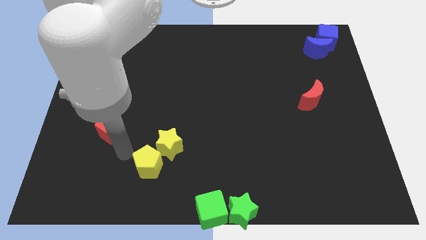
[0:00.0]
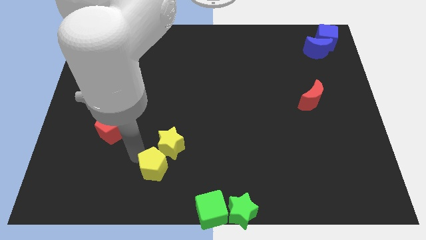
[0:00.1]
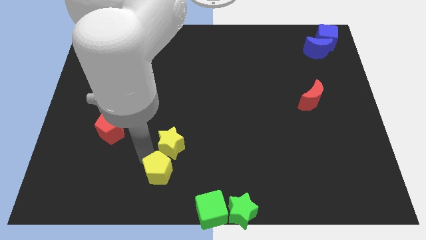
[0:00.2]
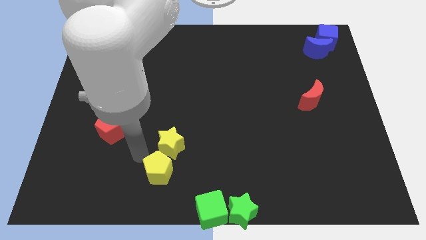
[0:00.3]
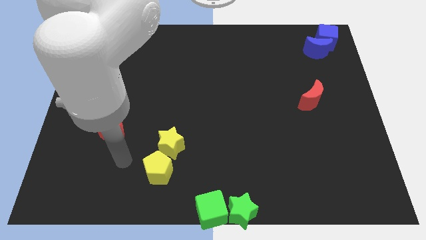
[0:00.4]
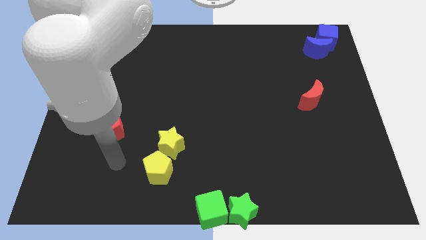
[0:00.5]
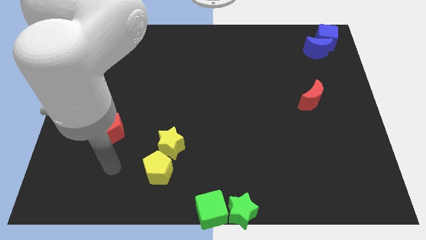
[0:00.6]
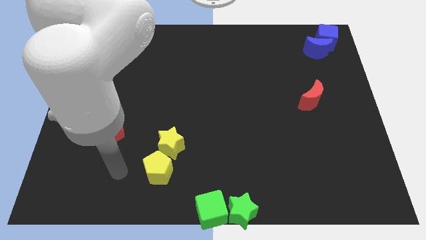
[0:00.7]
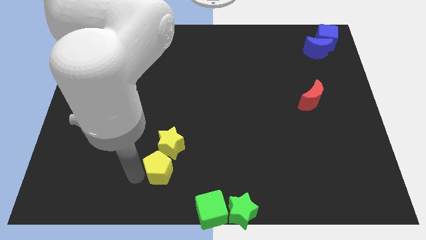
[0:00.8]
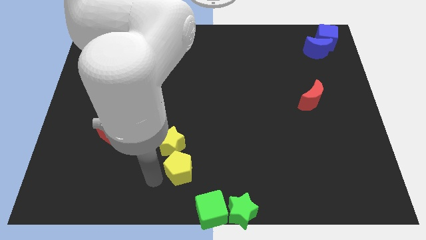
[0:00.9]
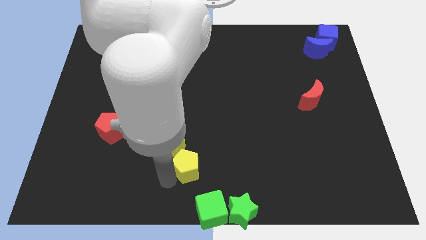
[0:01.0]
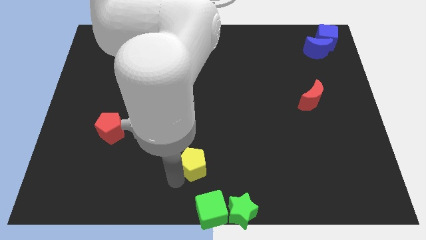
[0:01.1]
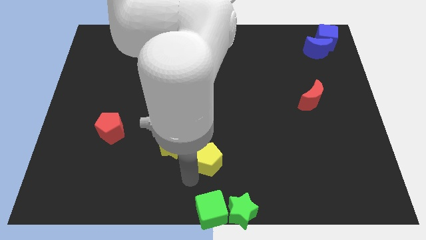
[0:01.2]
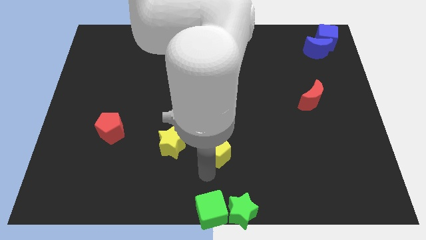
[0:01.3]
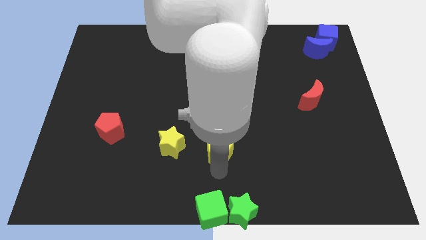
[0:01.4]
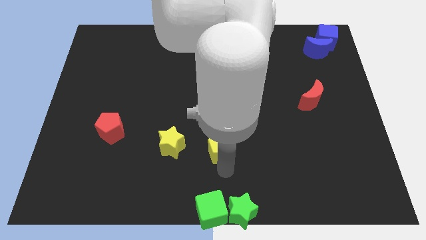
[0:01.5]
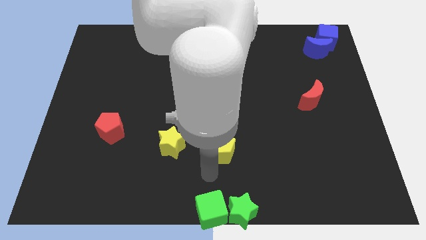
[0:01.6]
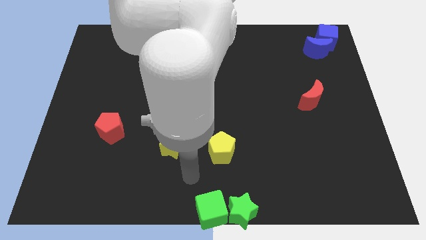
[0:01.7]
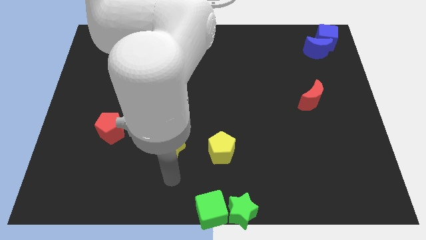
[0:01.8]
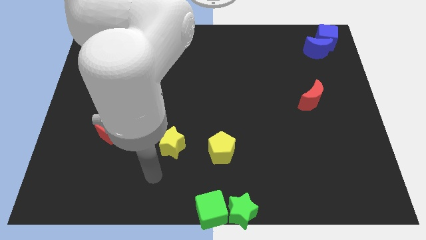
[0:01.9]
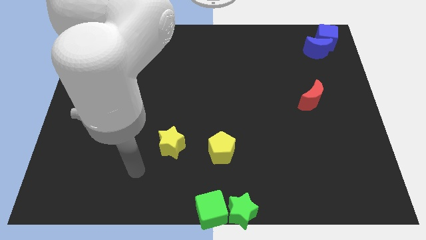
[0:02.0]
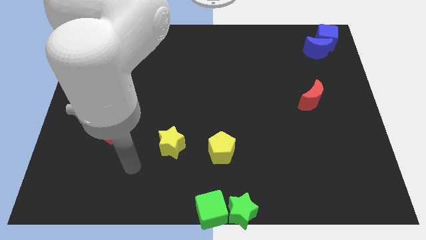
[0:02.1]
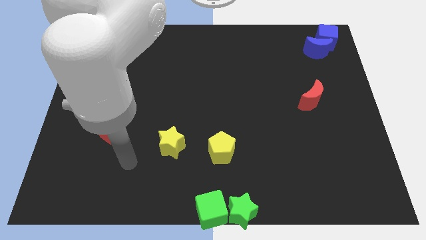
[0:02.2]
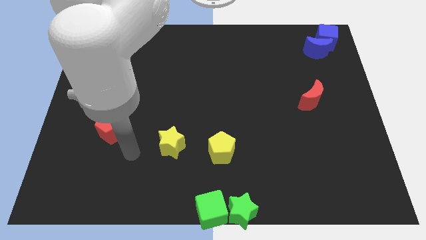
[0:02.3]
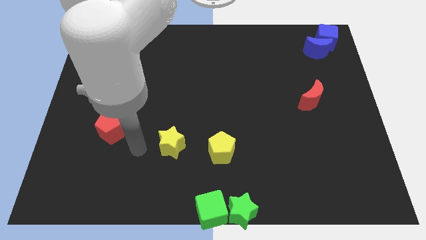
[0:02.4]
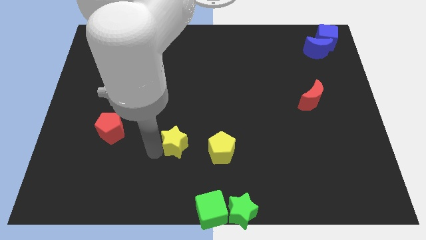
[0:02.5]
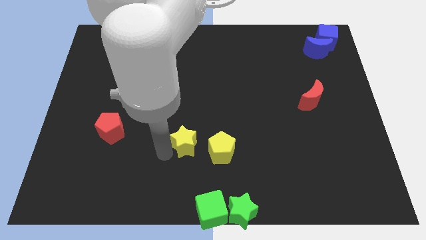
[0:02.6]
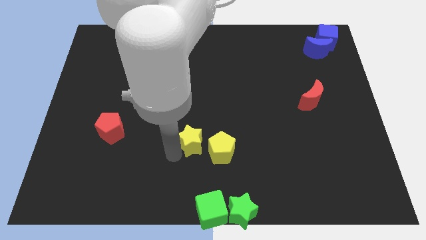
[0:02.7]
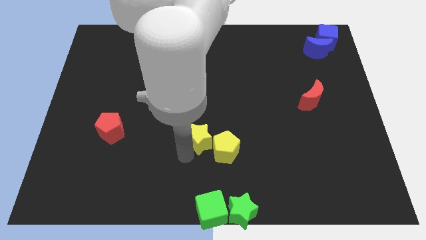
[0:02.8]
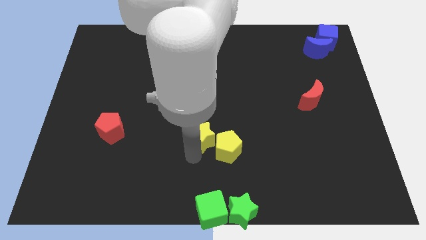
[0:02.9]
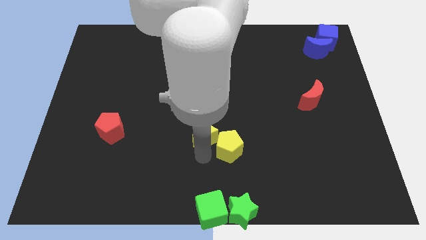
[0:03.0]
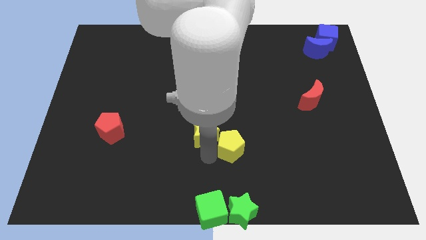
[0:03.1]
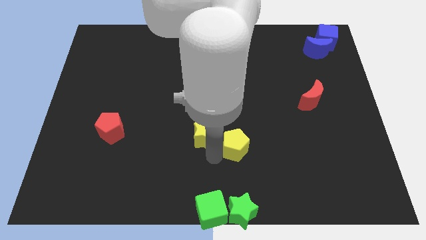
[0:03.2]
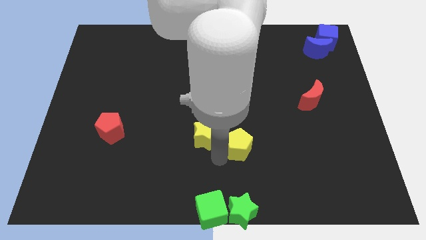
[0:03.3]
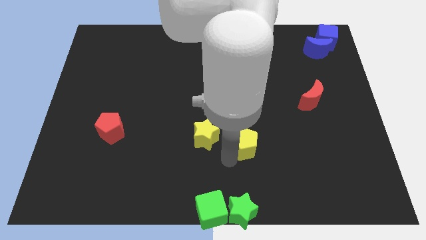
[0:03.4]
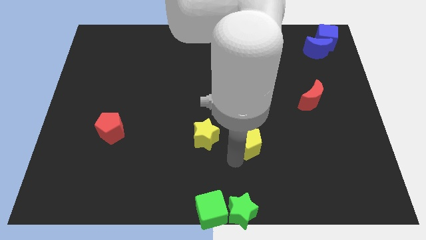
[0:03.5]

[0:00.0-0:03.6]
push yellow pentagon above green star

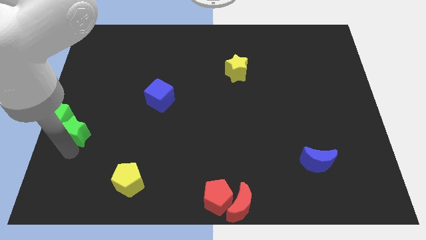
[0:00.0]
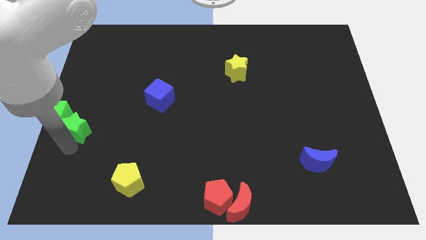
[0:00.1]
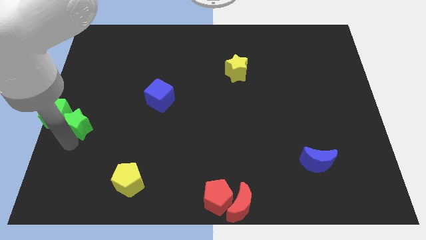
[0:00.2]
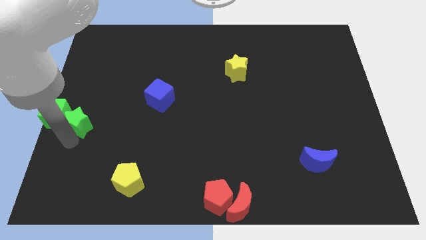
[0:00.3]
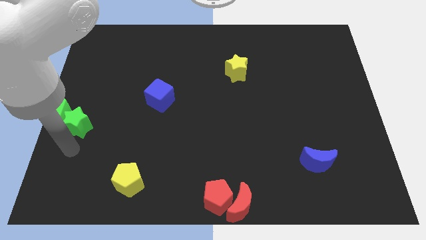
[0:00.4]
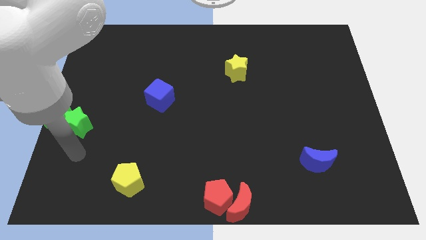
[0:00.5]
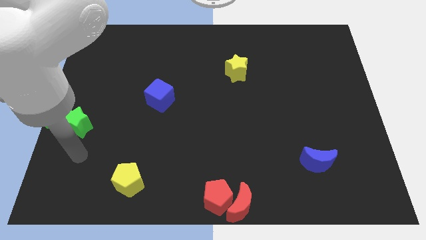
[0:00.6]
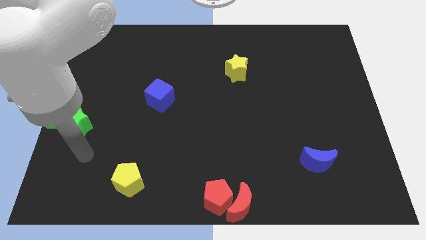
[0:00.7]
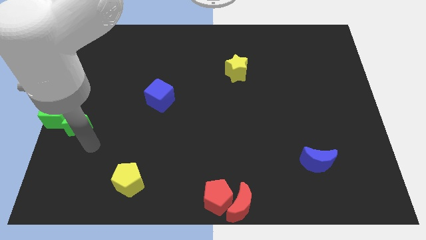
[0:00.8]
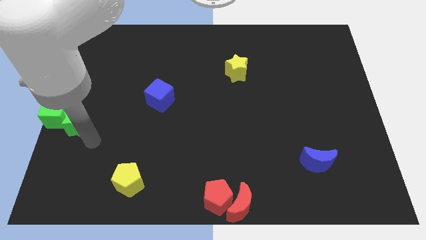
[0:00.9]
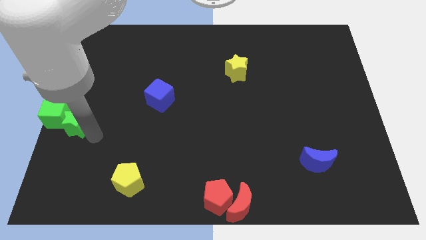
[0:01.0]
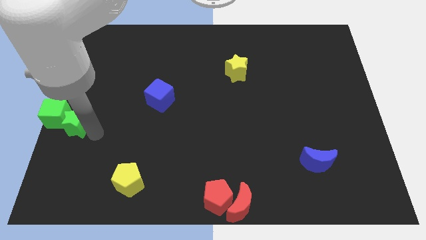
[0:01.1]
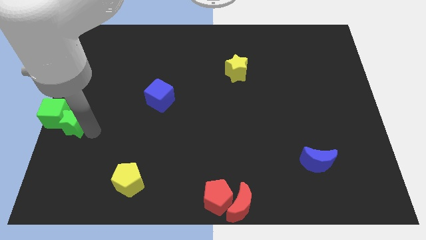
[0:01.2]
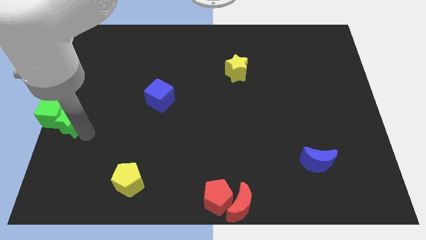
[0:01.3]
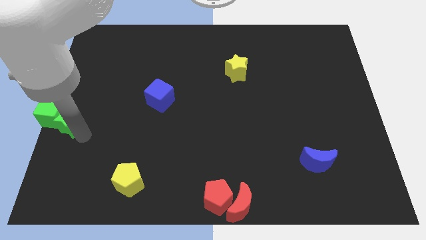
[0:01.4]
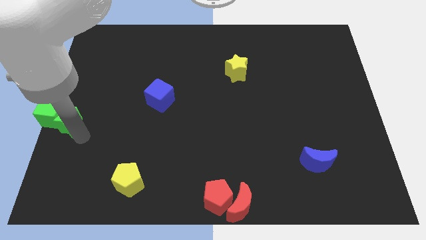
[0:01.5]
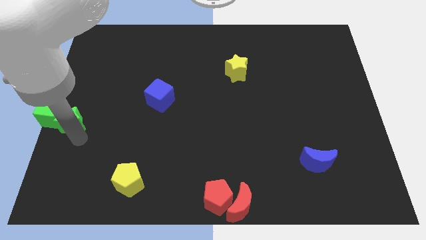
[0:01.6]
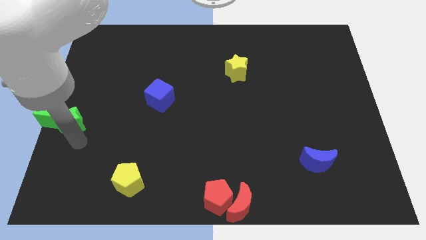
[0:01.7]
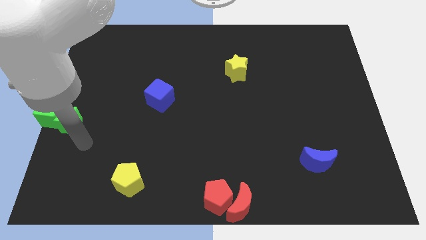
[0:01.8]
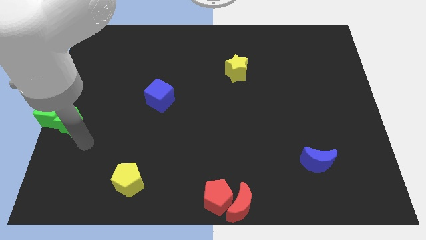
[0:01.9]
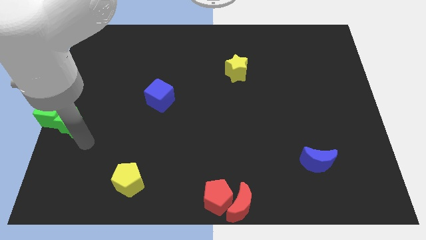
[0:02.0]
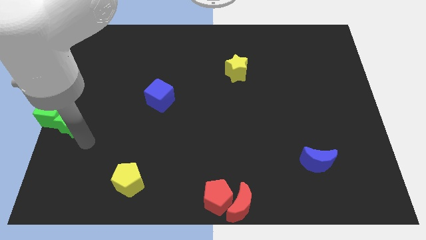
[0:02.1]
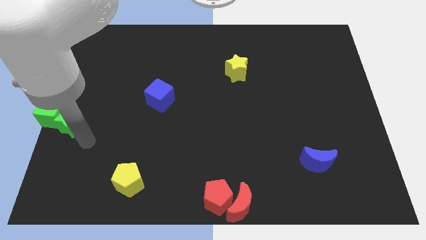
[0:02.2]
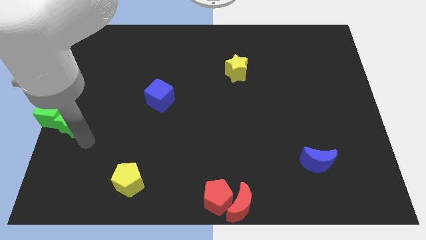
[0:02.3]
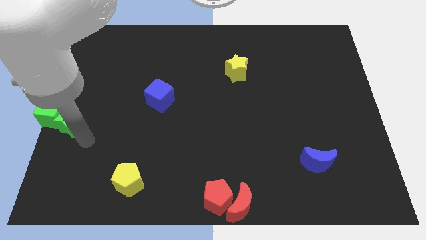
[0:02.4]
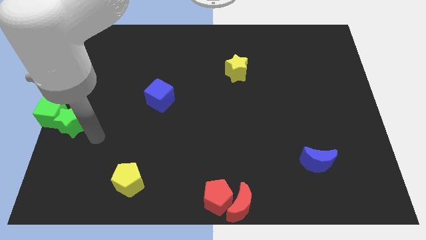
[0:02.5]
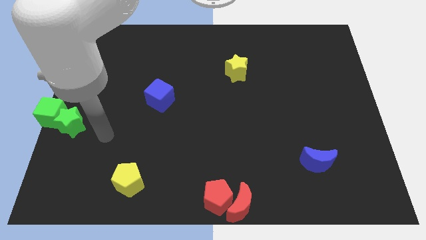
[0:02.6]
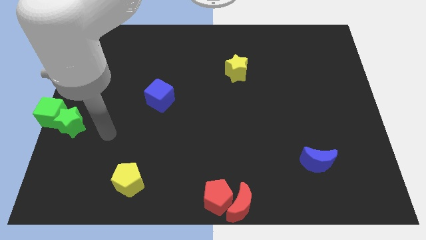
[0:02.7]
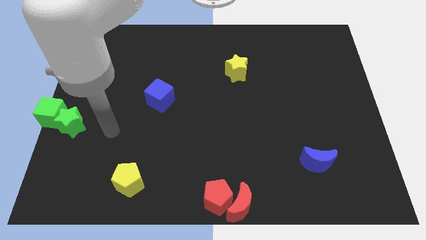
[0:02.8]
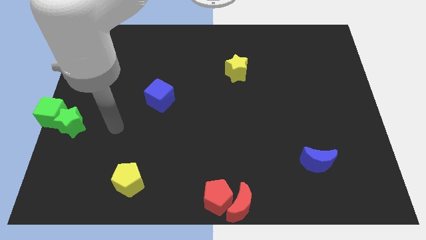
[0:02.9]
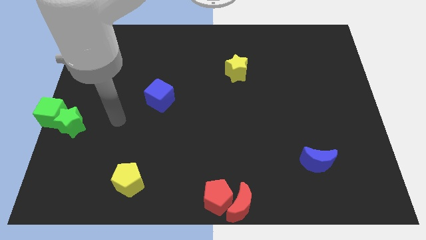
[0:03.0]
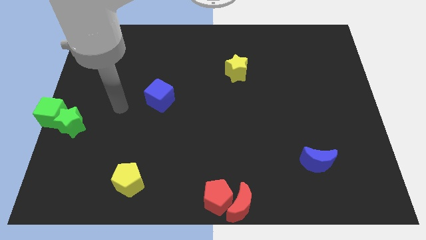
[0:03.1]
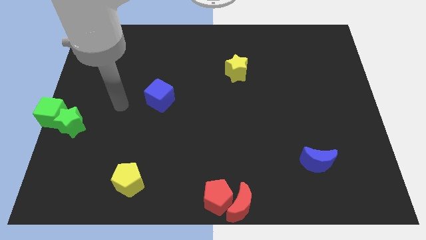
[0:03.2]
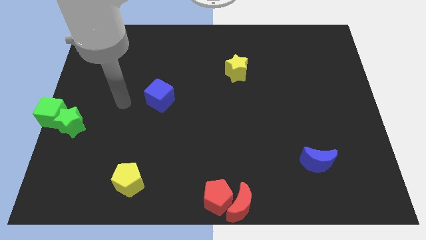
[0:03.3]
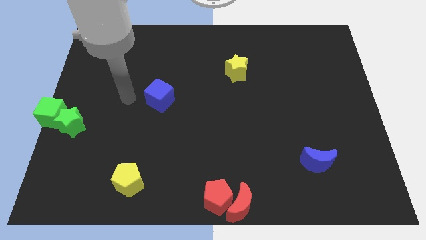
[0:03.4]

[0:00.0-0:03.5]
slightly push the green blocks to the left of the board

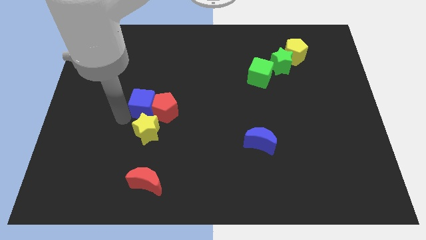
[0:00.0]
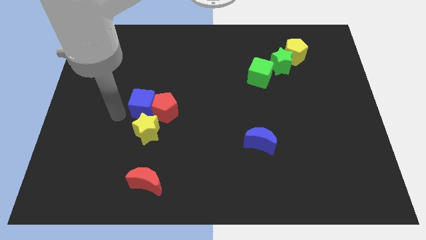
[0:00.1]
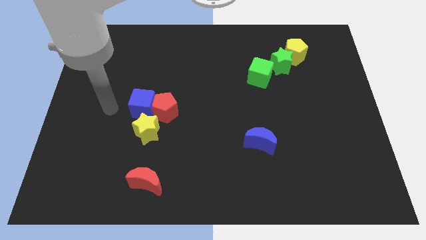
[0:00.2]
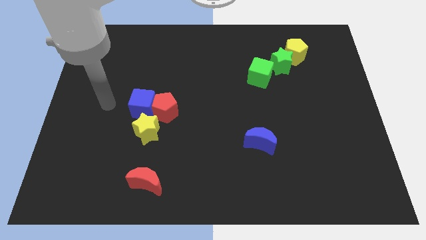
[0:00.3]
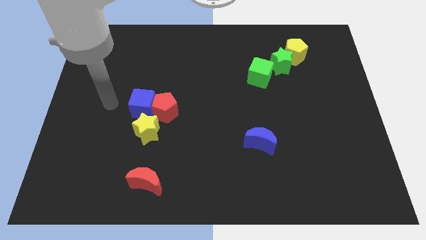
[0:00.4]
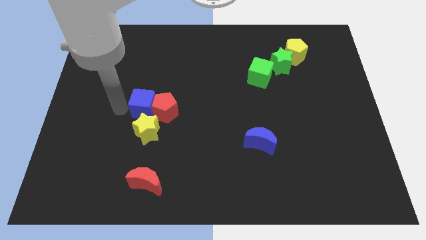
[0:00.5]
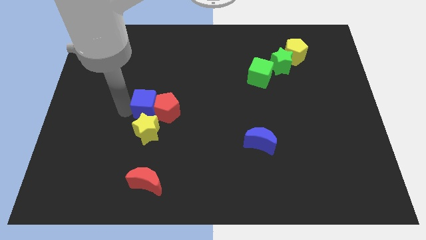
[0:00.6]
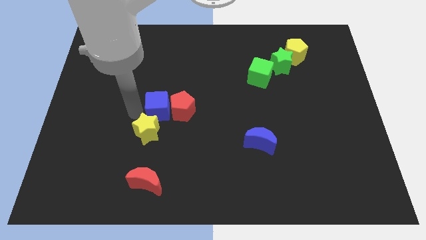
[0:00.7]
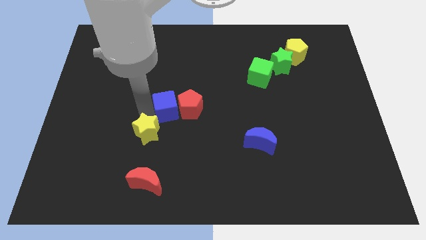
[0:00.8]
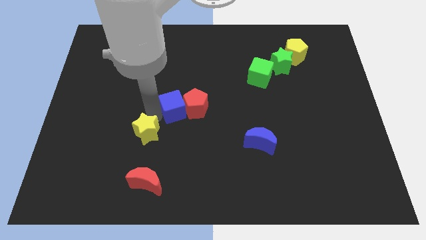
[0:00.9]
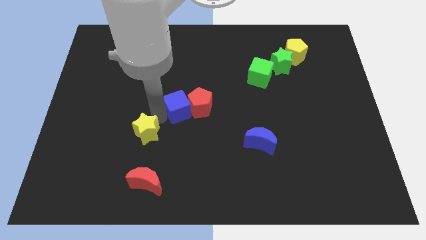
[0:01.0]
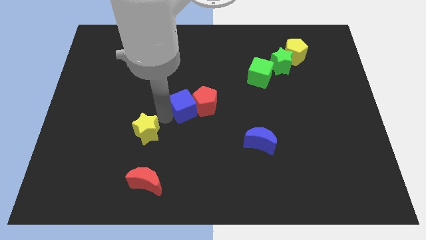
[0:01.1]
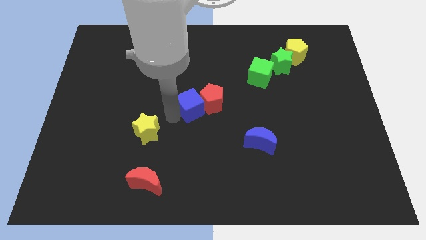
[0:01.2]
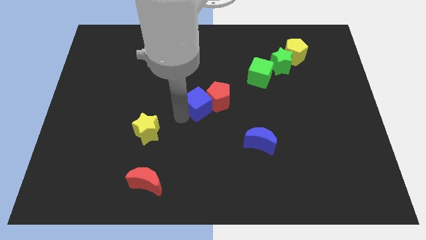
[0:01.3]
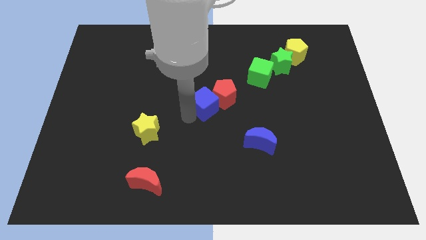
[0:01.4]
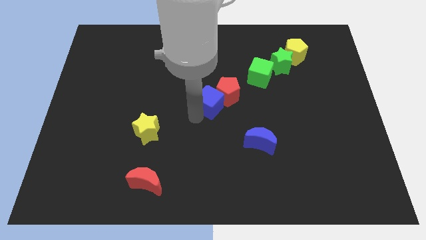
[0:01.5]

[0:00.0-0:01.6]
move the blue cube and red pentagon diagonal top right to yellow star

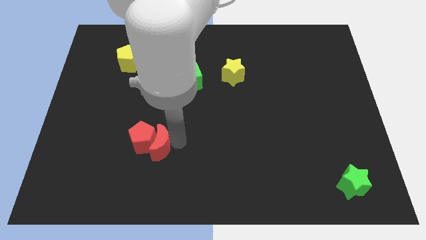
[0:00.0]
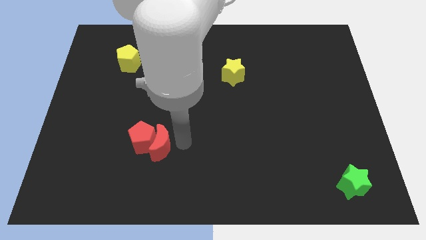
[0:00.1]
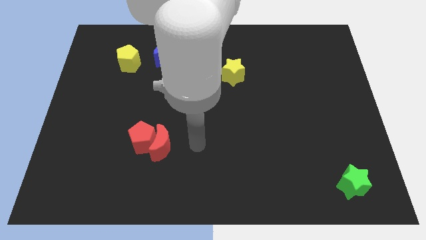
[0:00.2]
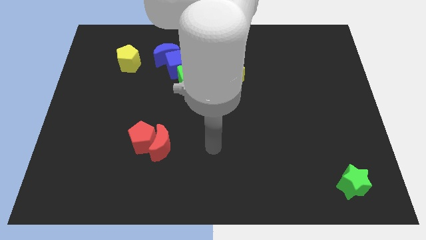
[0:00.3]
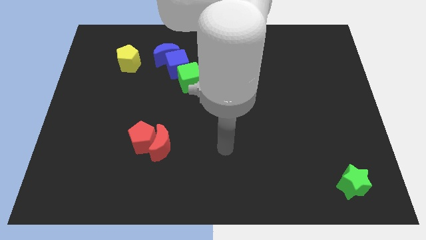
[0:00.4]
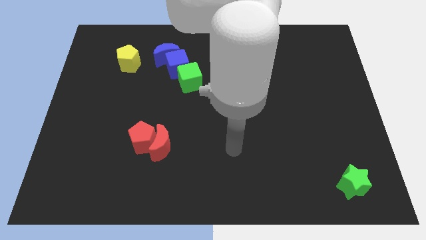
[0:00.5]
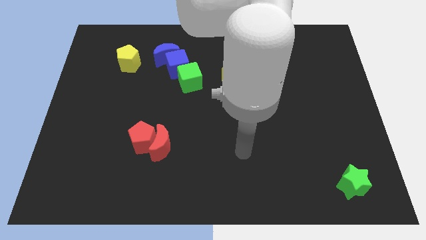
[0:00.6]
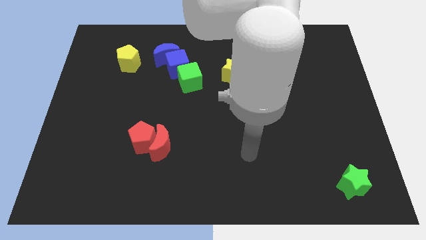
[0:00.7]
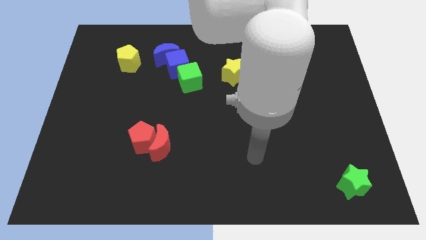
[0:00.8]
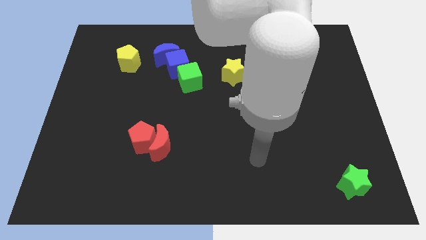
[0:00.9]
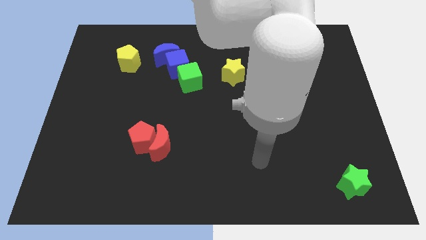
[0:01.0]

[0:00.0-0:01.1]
move the arm away from the red moon
